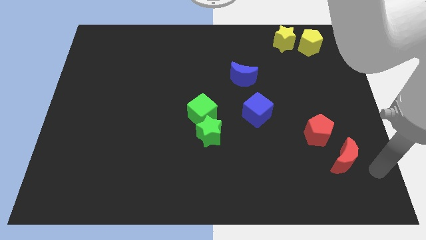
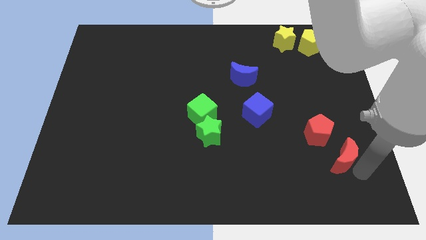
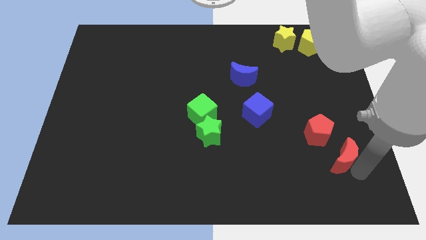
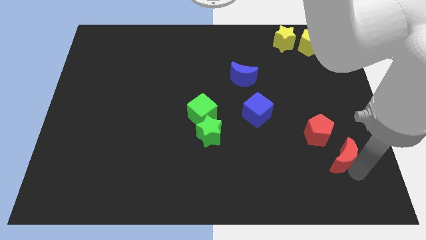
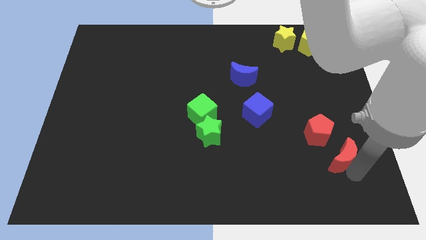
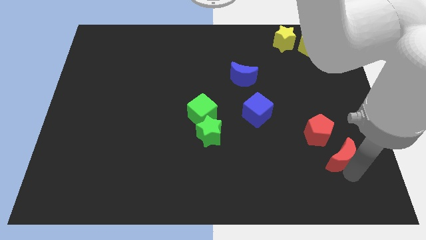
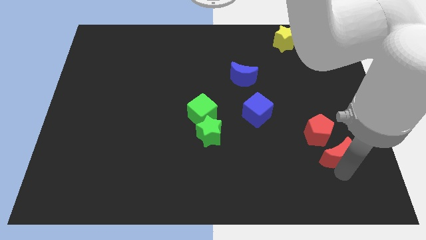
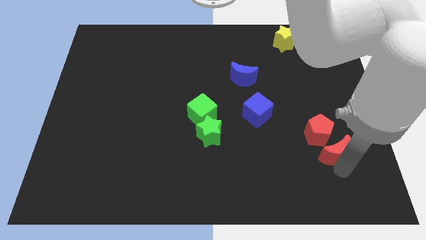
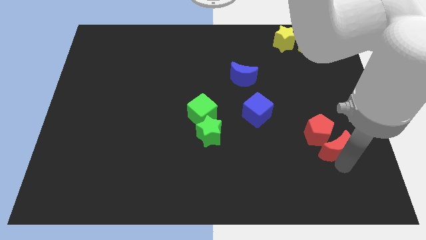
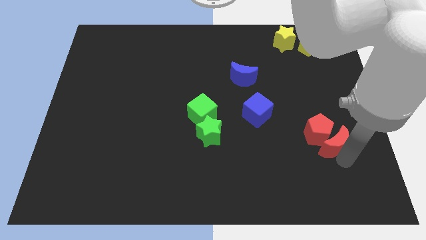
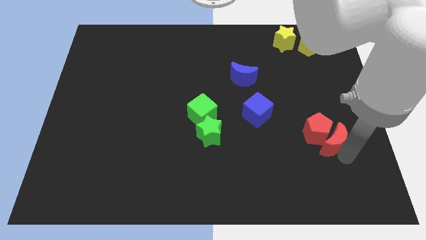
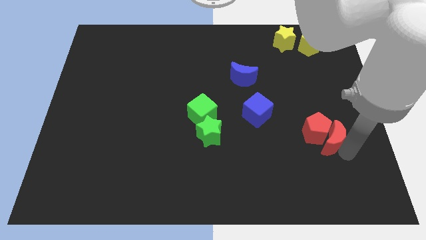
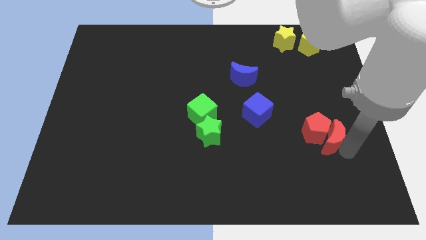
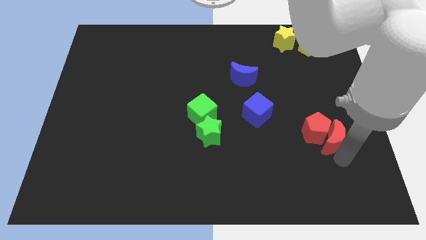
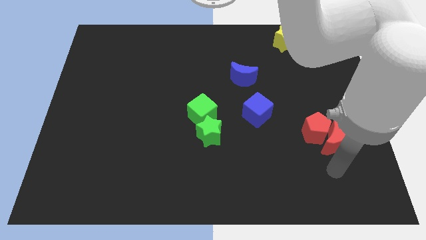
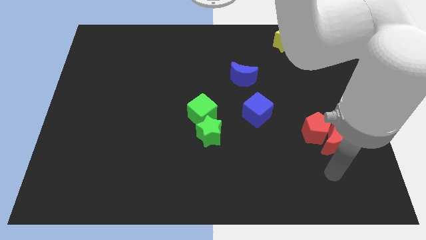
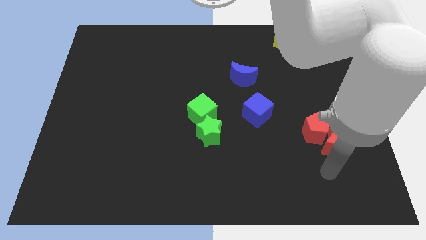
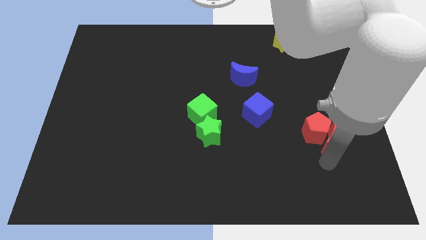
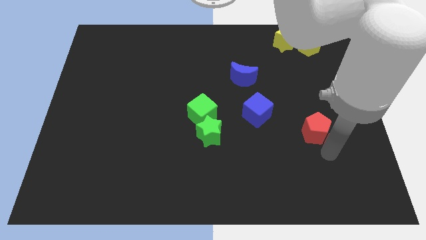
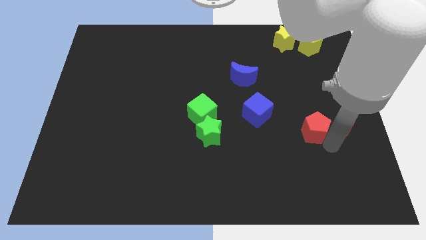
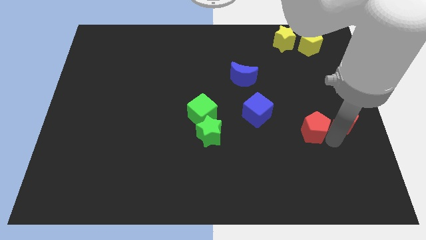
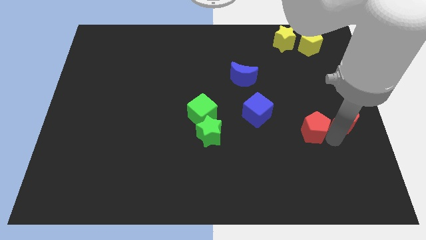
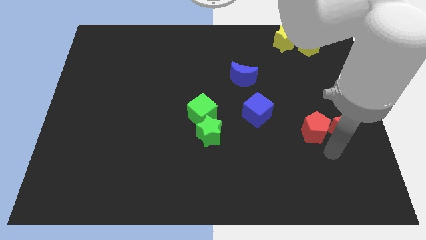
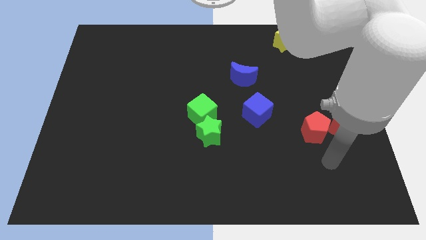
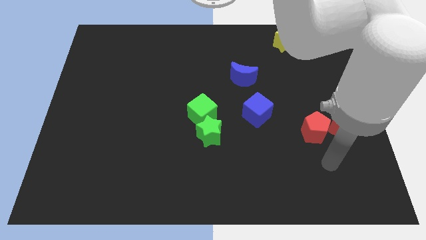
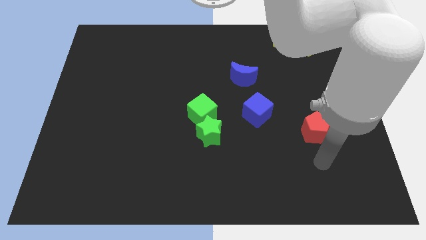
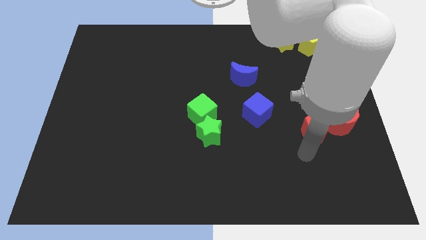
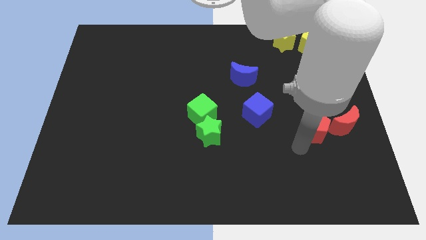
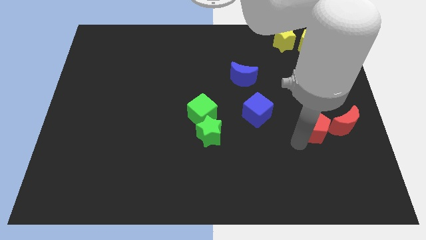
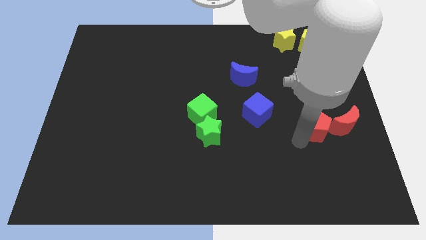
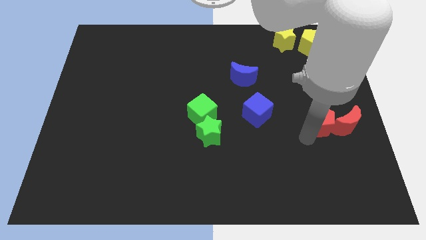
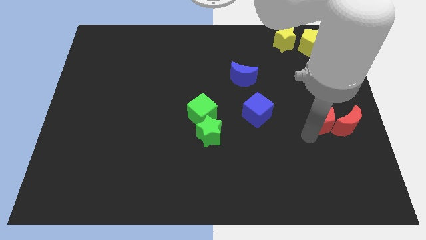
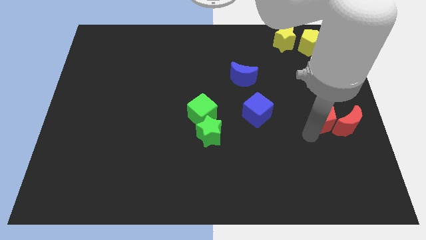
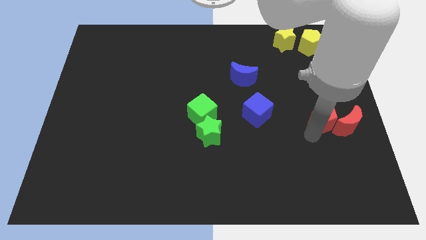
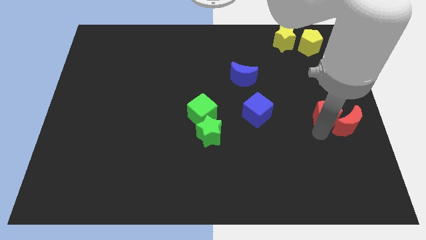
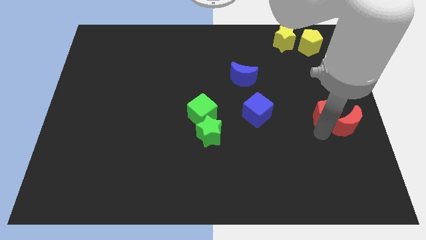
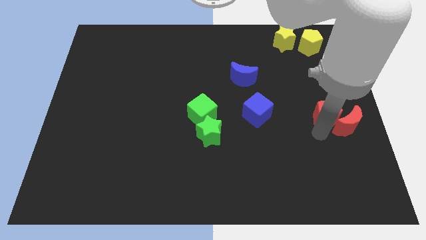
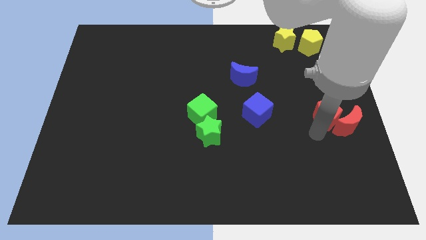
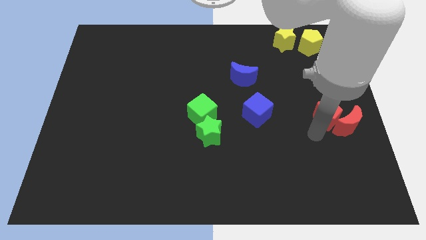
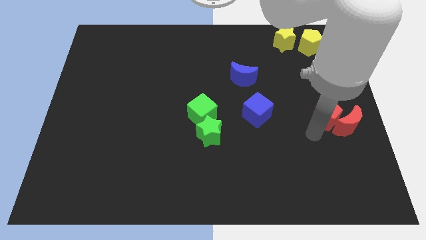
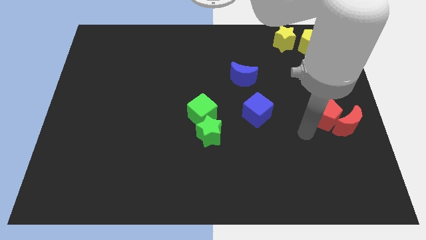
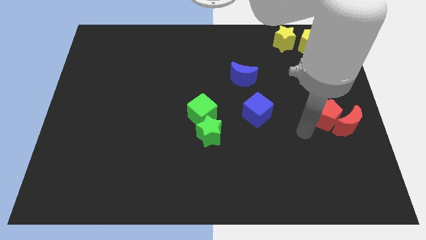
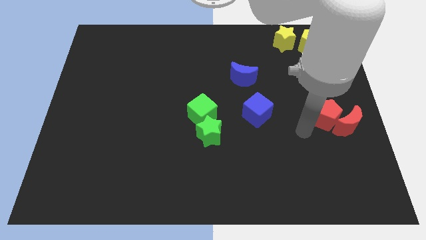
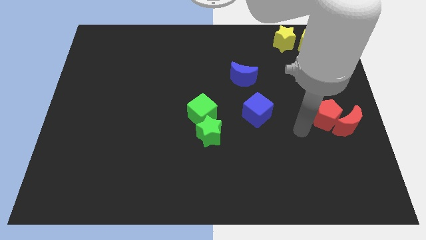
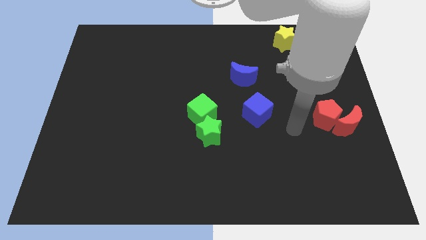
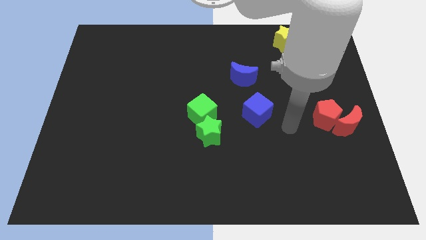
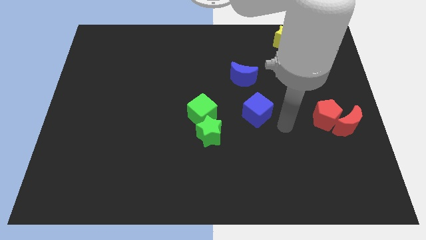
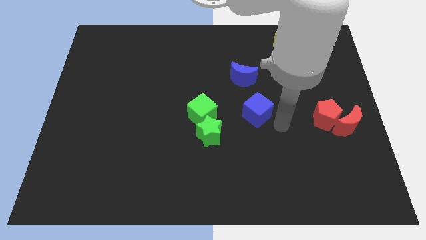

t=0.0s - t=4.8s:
push red pentagon and red moon parallel to blue cube

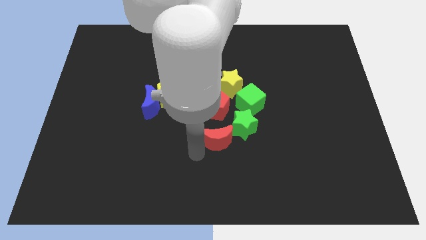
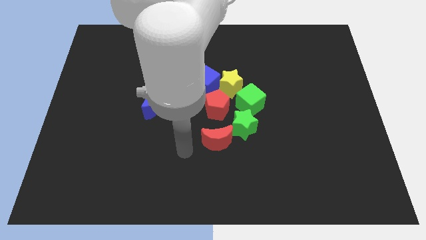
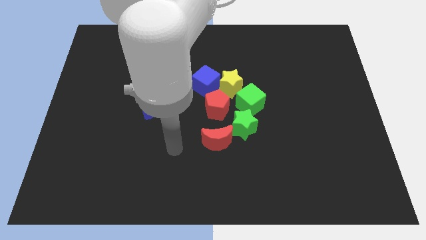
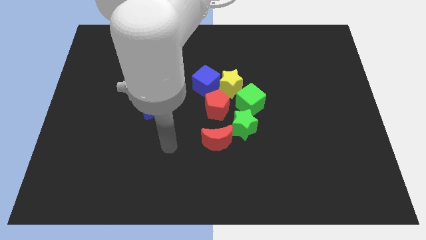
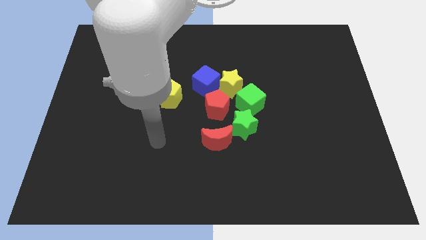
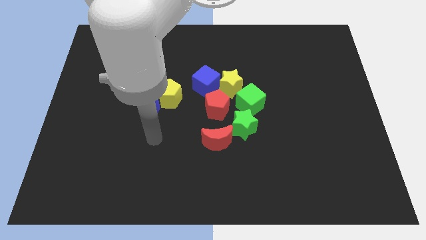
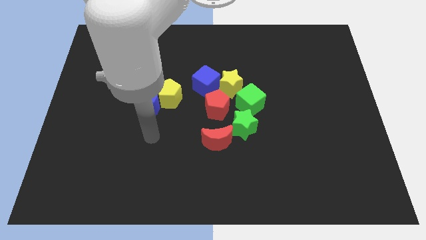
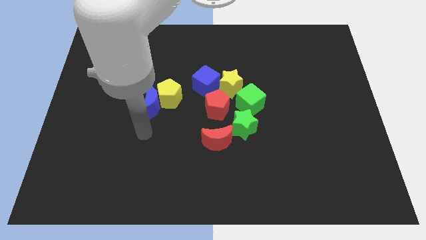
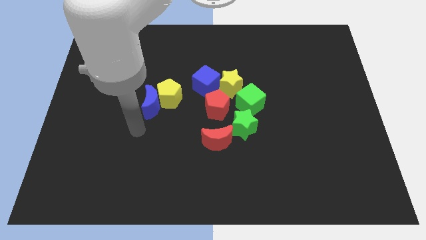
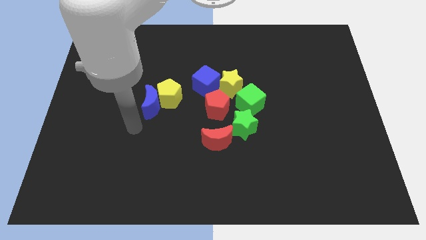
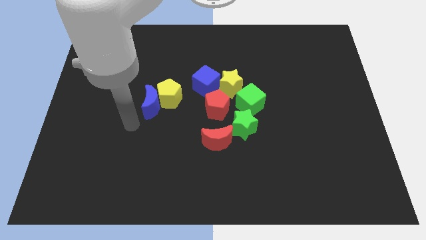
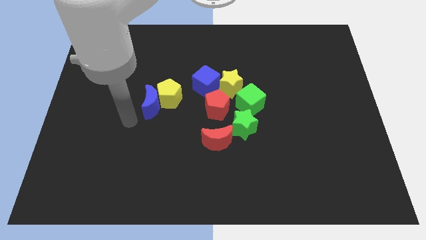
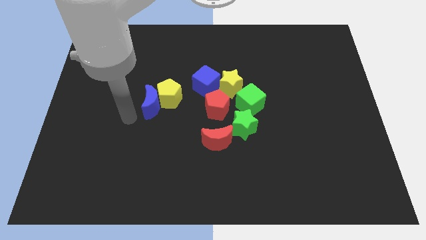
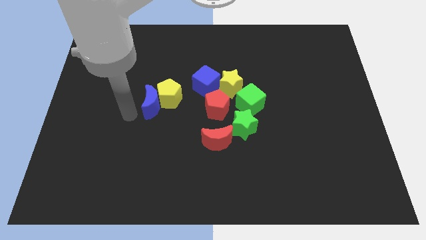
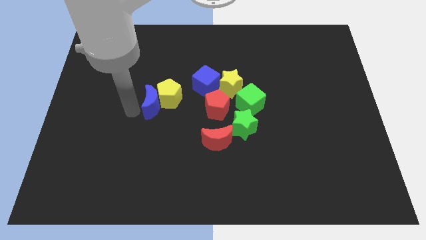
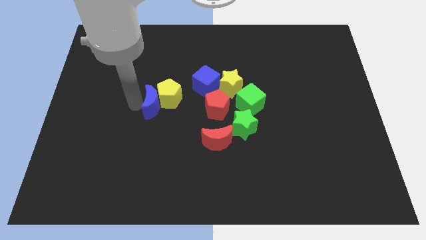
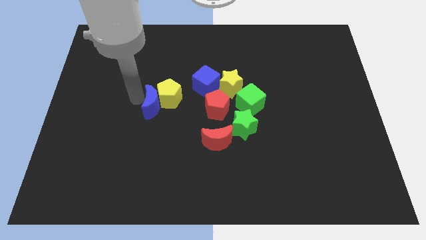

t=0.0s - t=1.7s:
point your arm at the left side of the blue crescent

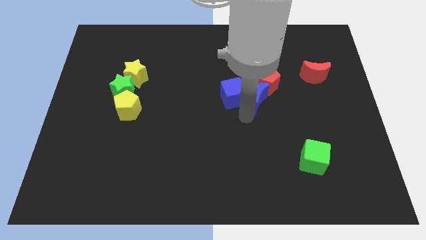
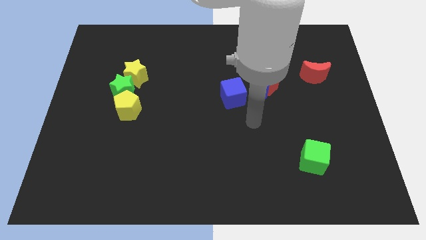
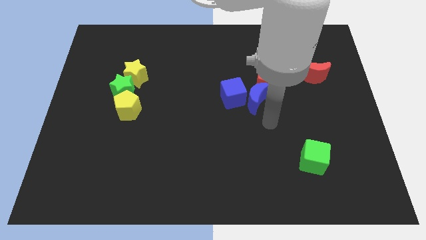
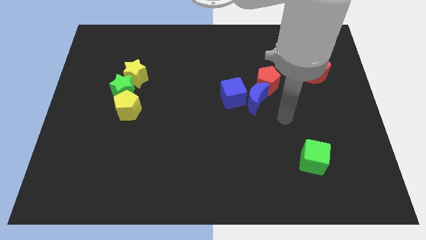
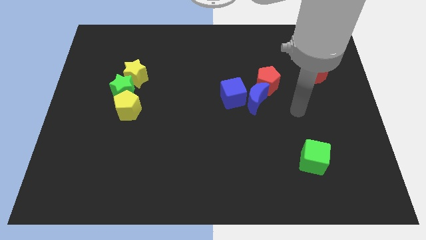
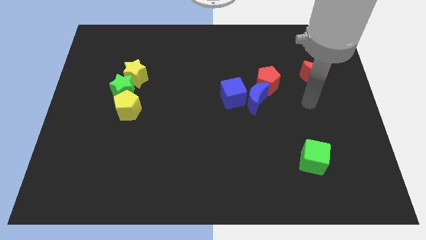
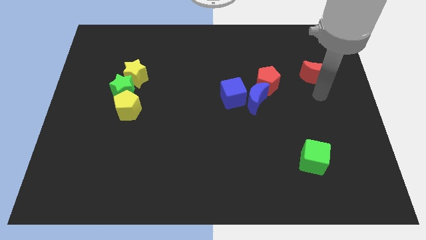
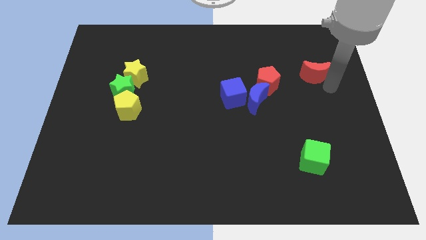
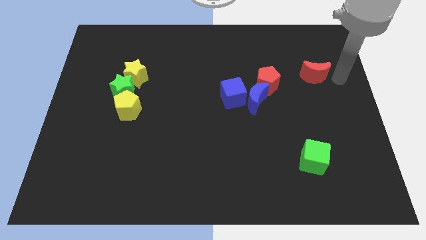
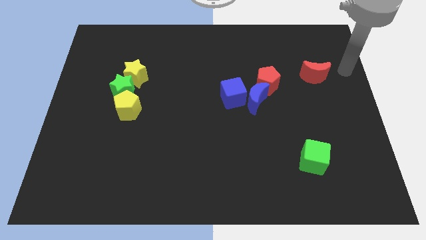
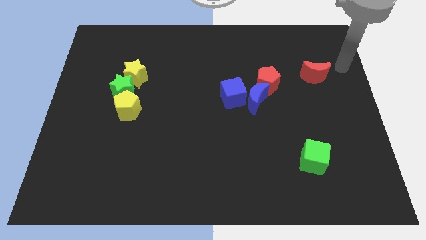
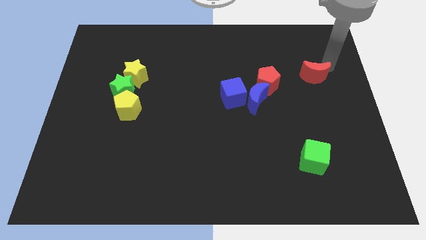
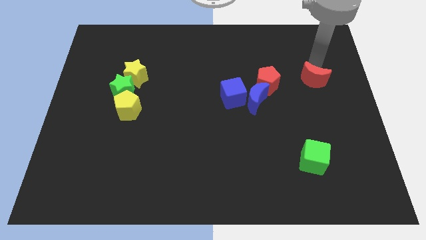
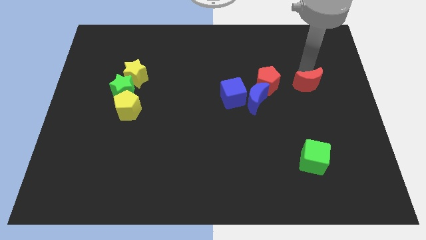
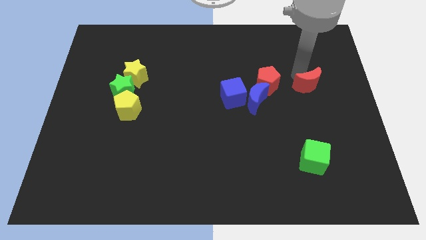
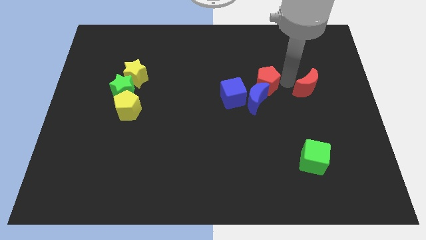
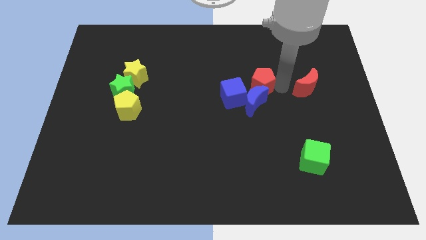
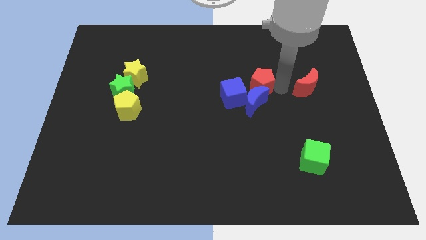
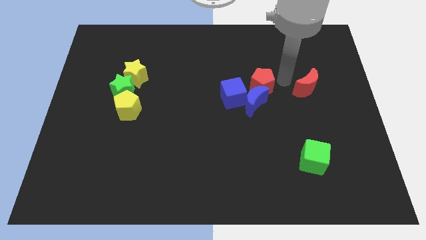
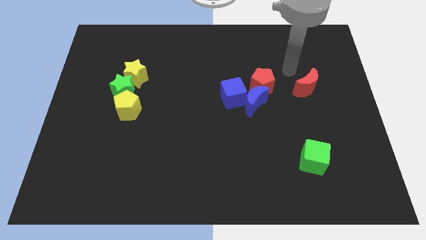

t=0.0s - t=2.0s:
move your arm towards the red moon

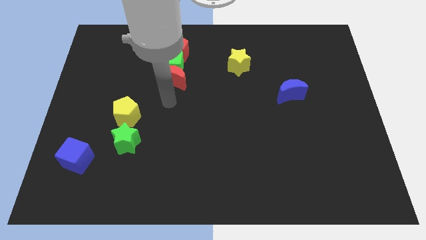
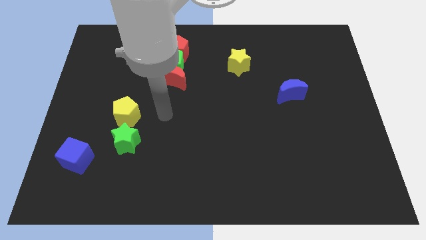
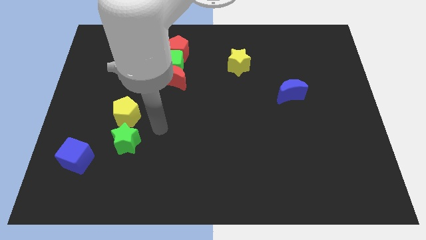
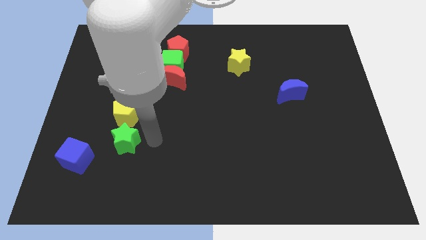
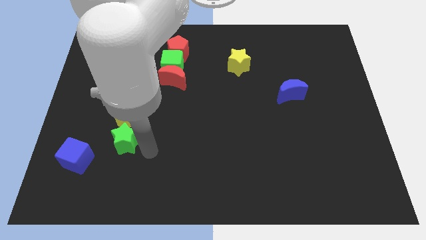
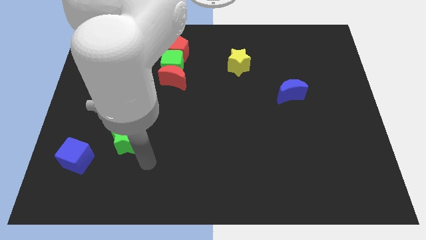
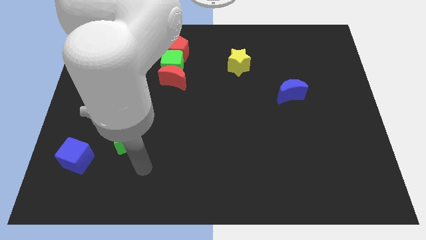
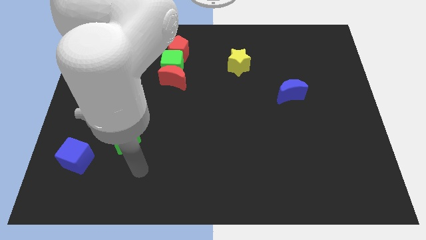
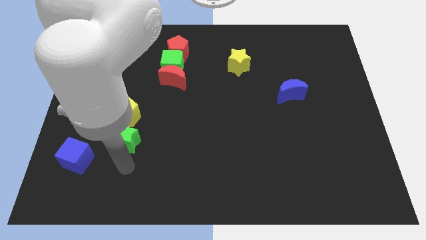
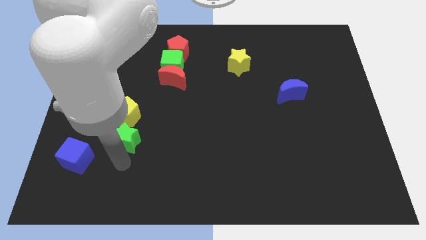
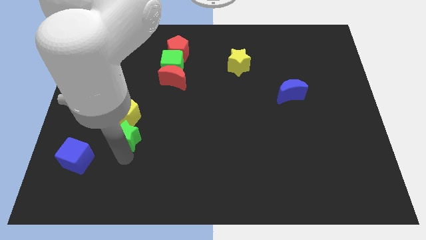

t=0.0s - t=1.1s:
go away from the red moon
